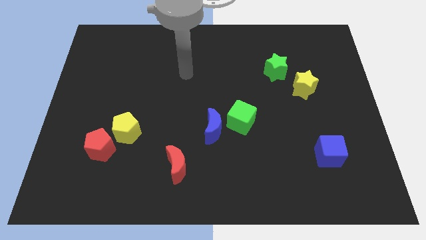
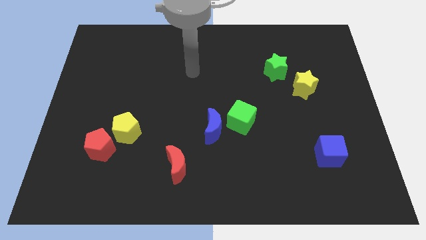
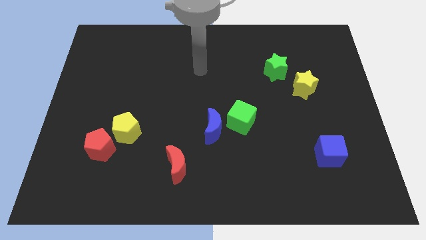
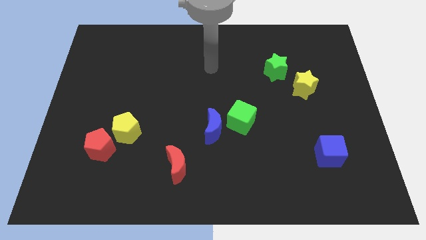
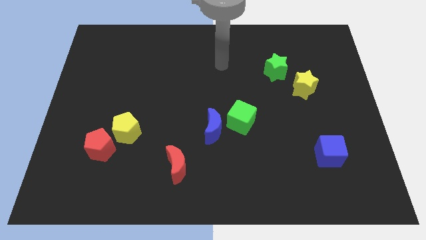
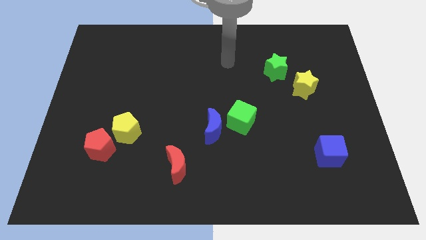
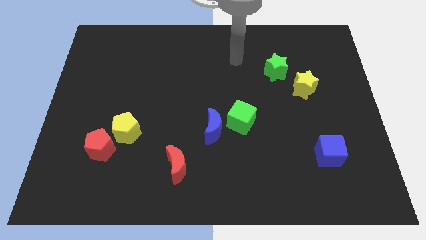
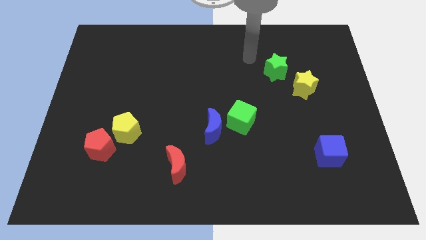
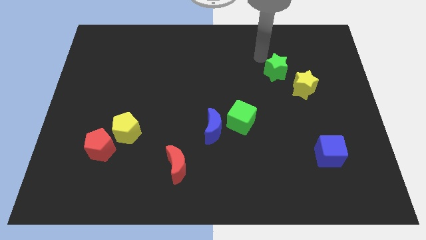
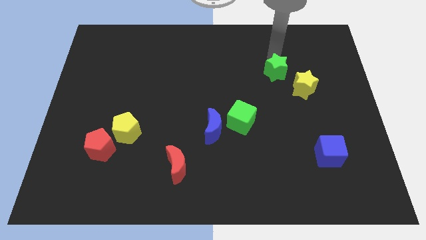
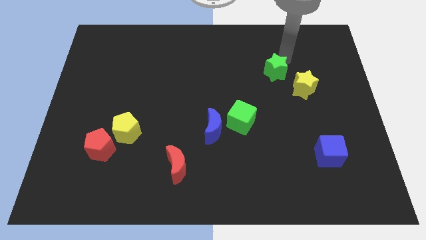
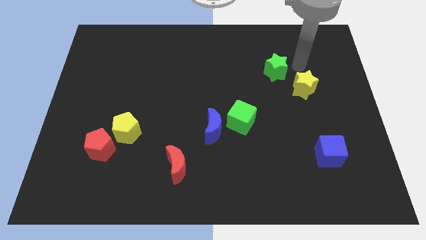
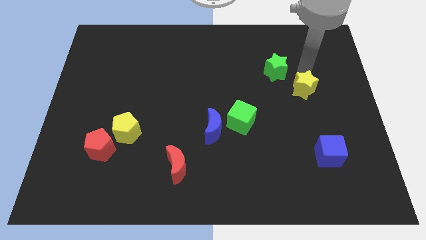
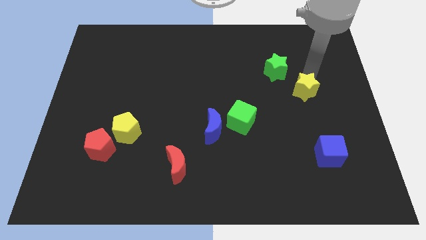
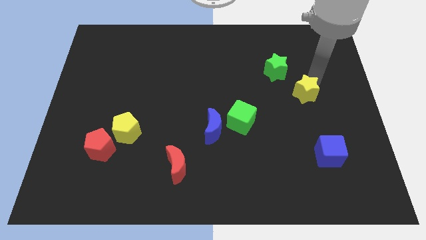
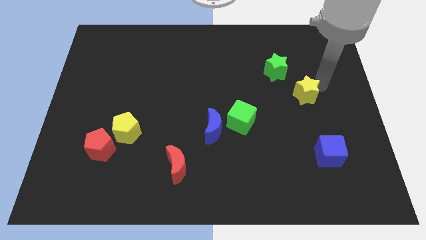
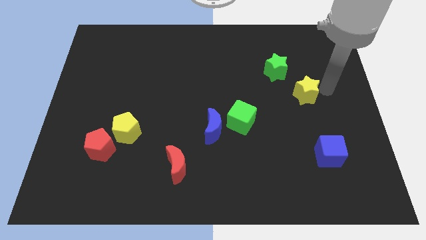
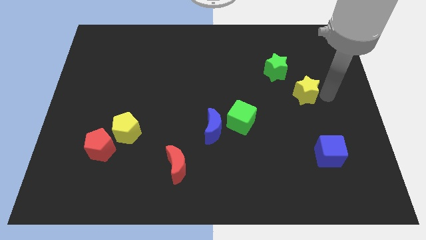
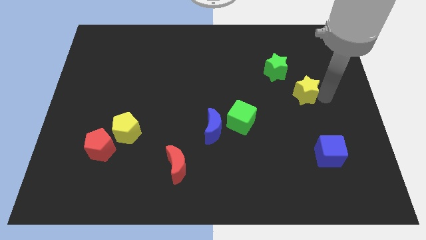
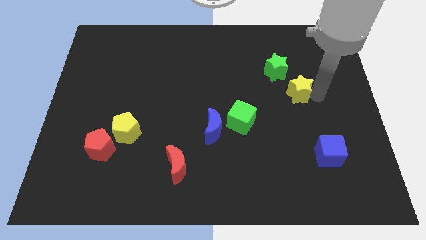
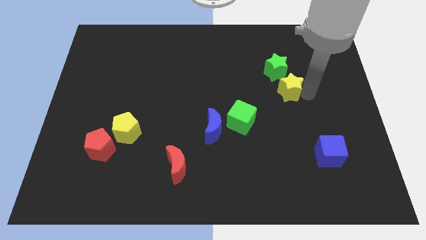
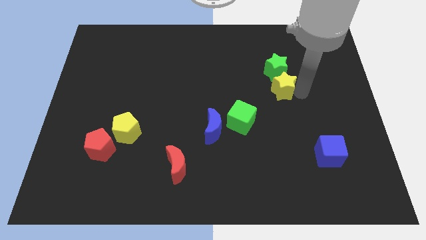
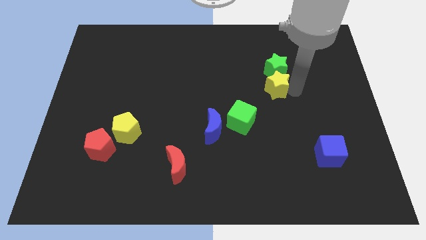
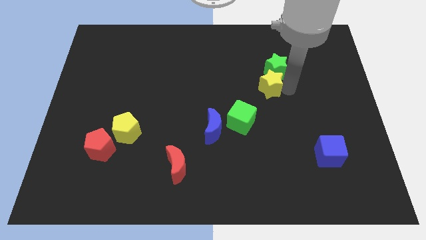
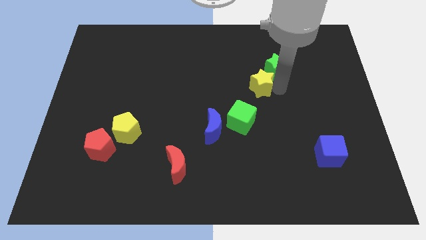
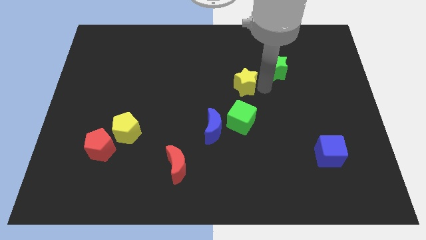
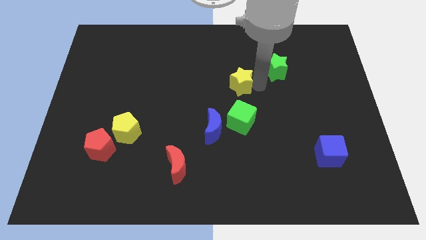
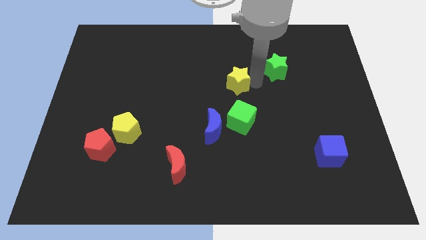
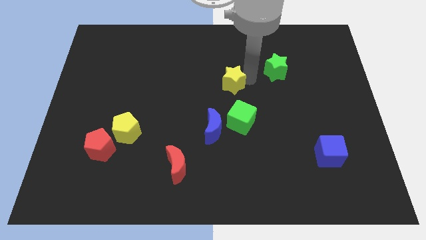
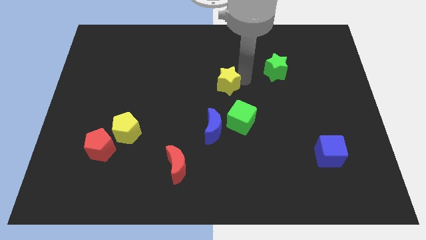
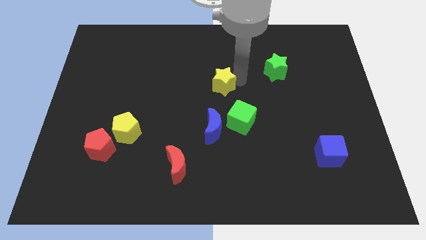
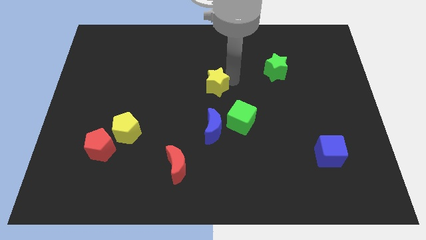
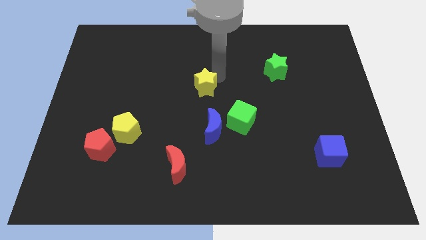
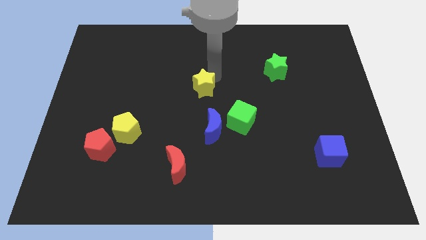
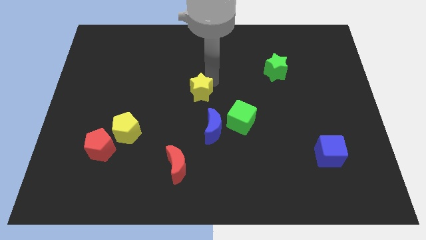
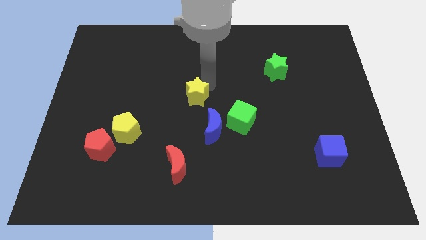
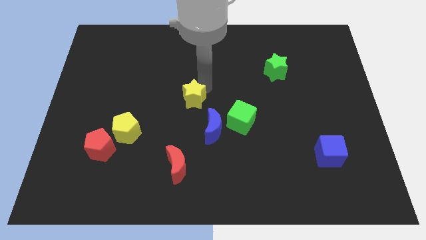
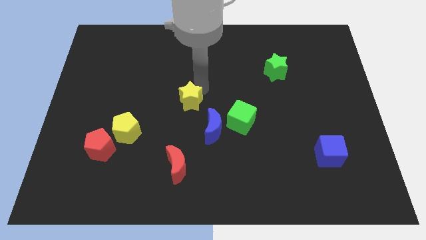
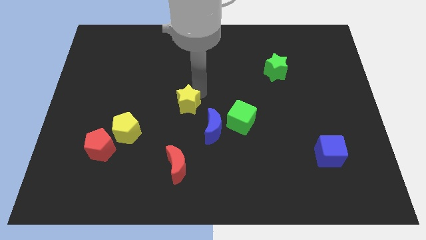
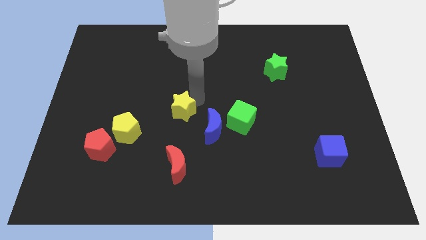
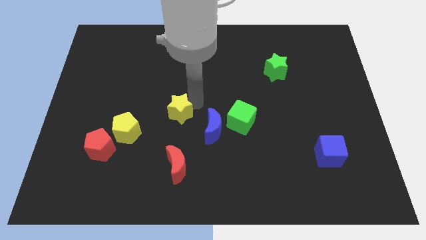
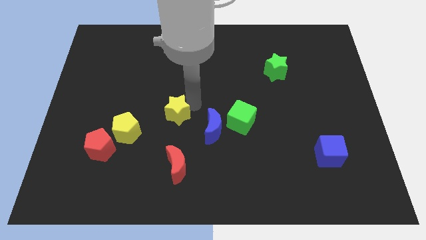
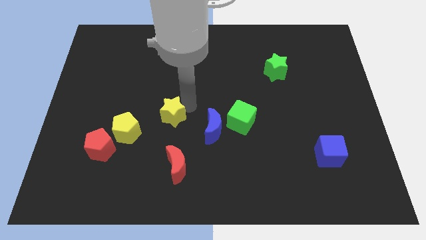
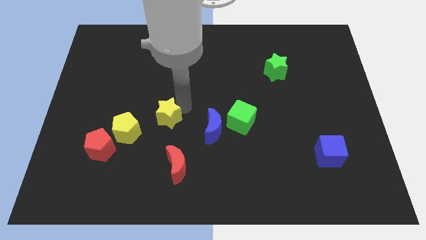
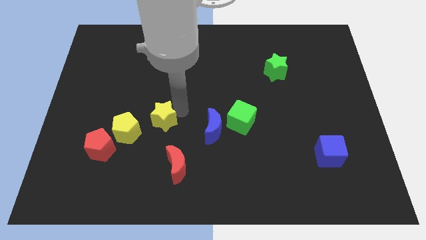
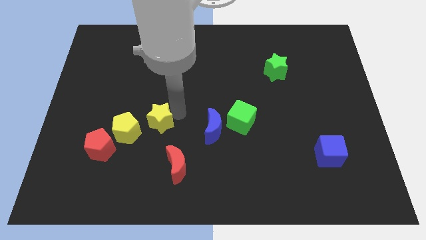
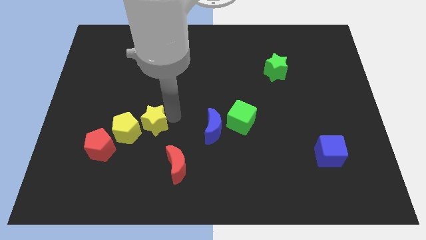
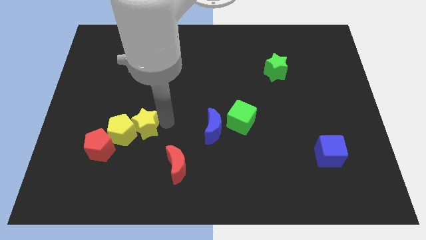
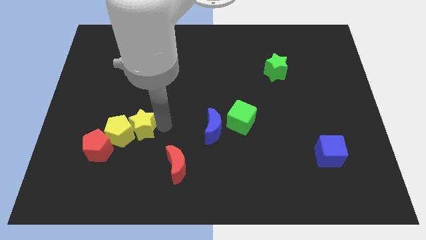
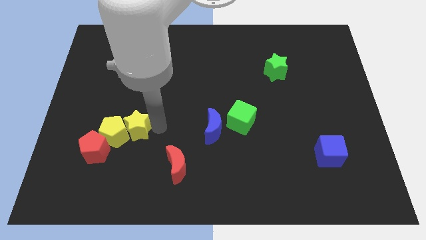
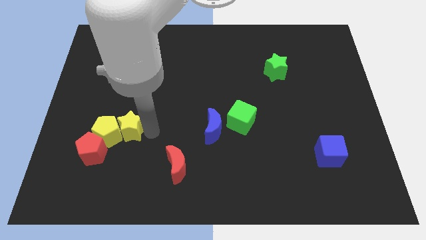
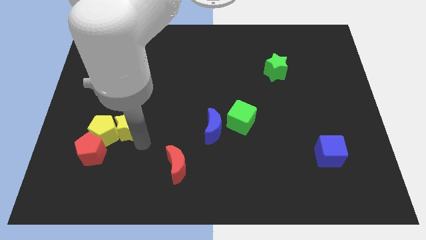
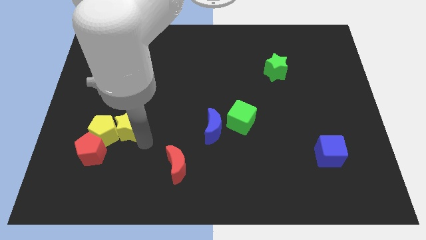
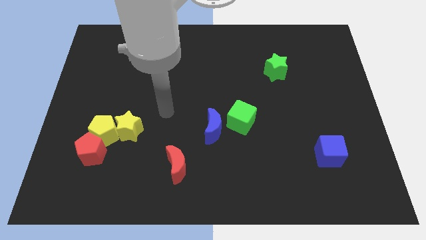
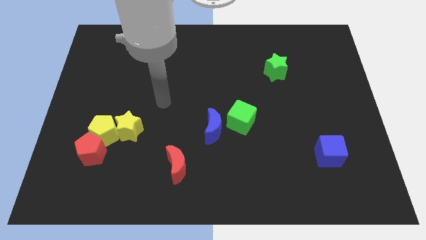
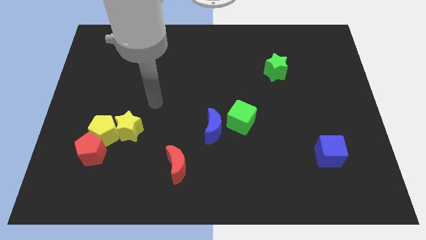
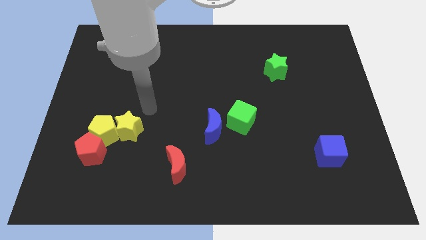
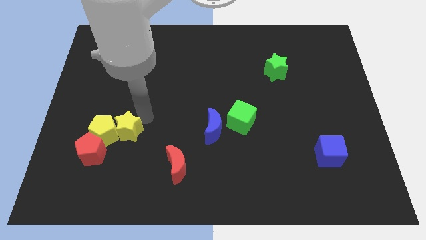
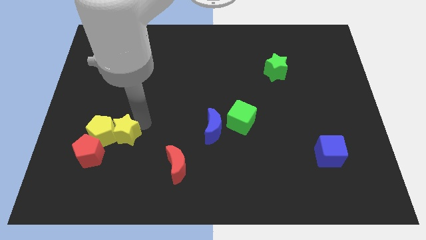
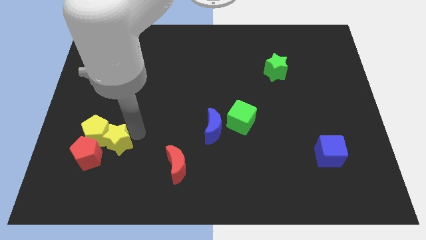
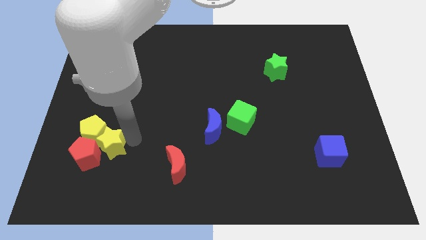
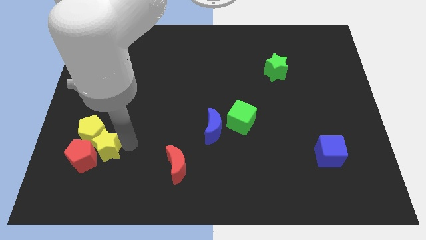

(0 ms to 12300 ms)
move the yellow star to the red pentagon

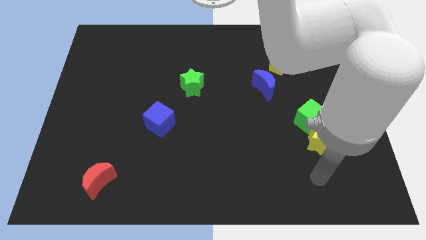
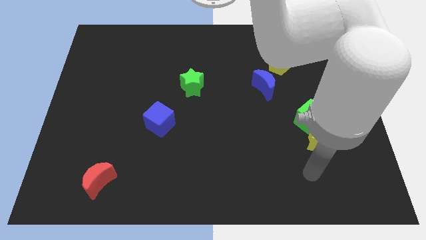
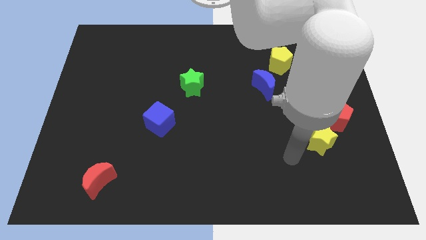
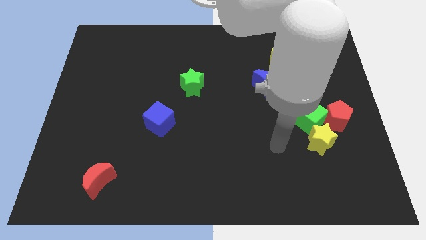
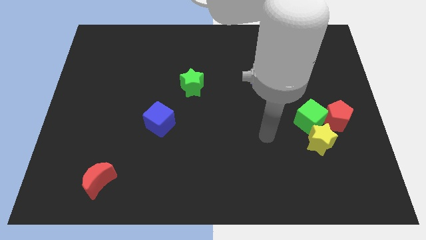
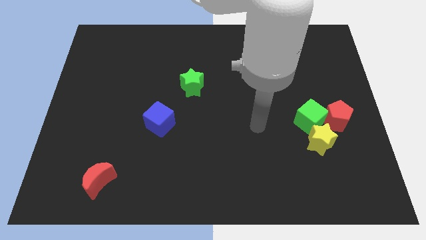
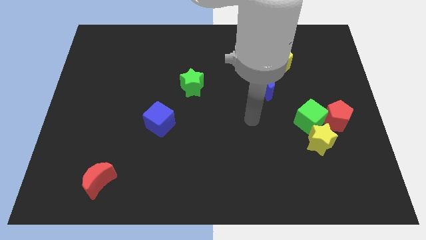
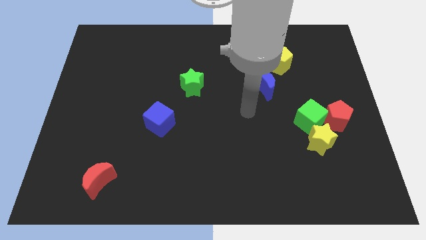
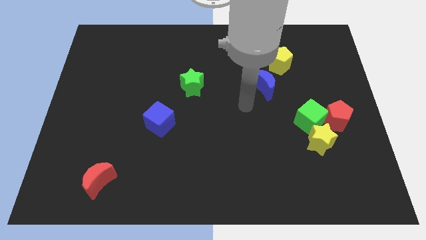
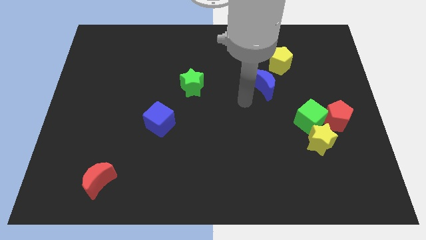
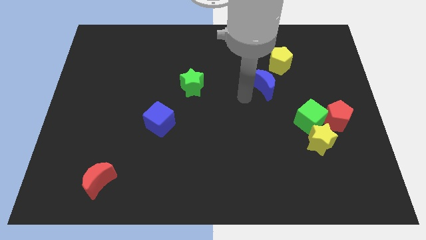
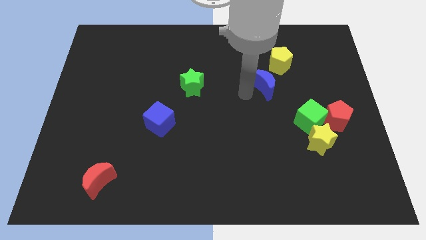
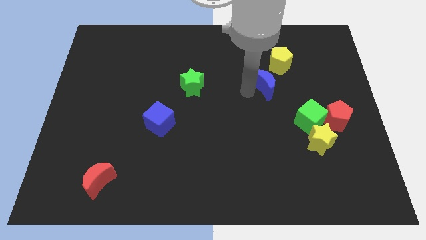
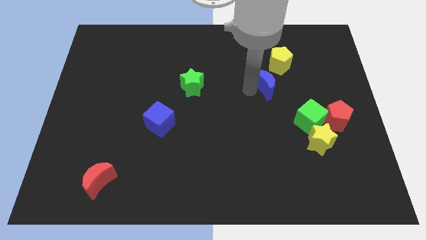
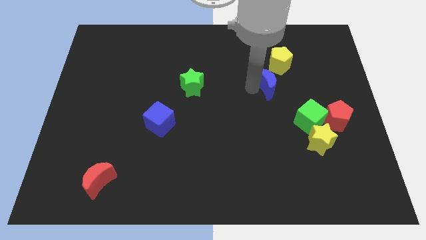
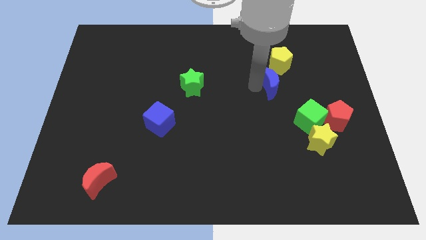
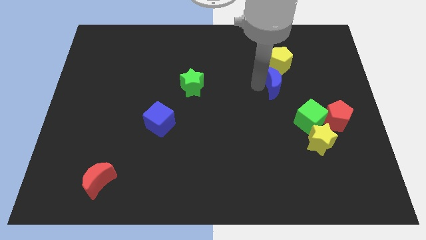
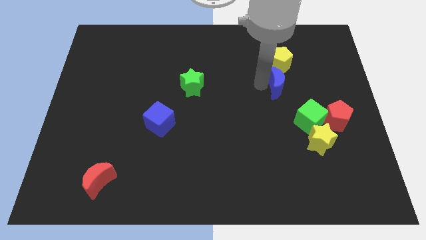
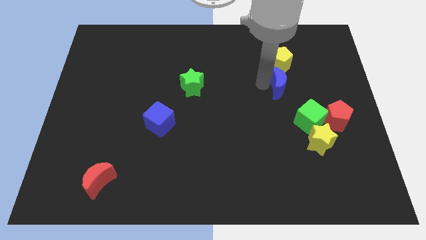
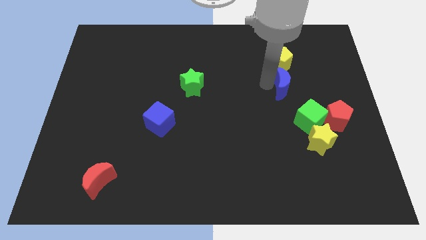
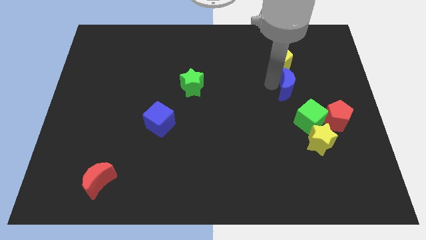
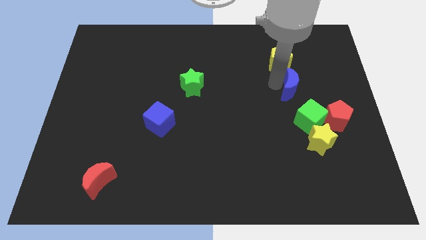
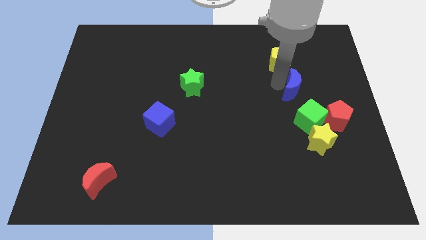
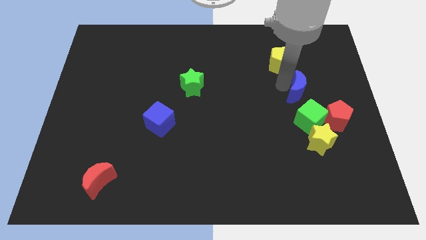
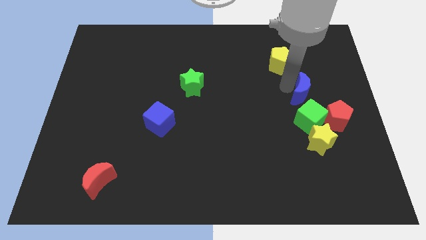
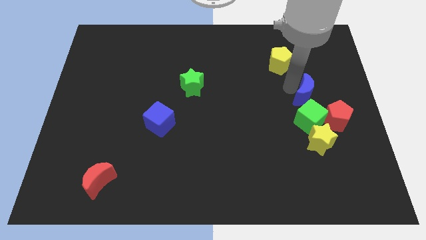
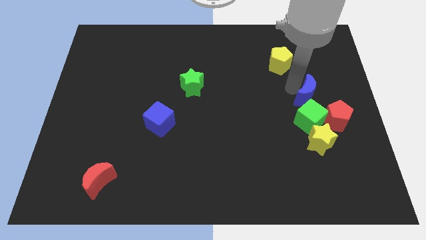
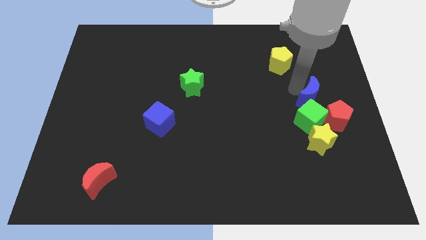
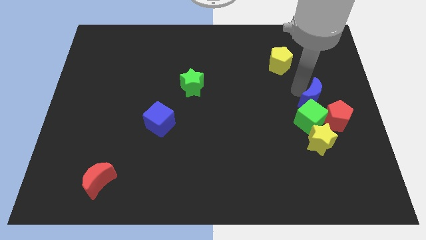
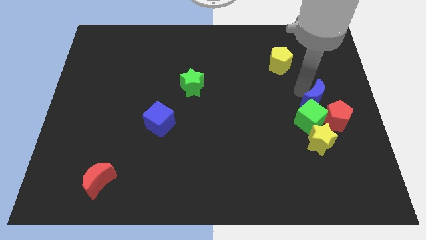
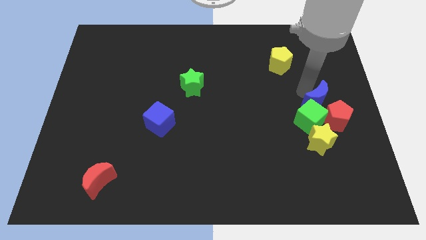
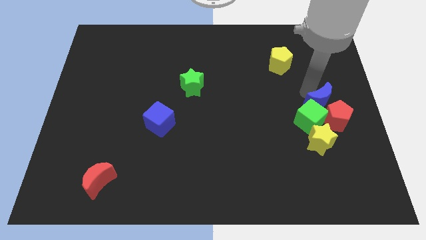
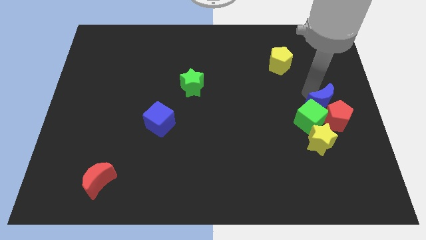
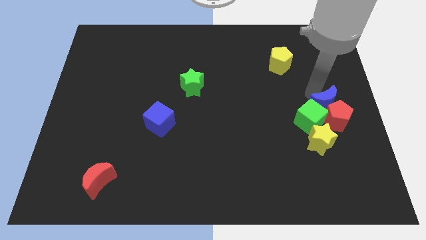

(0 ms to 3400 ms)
put the blue moon to the red pentagon
